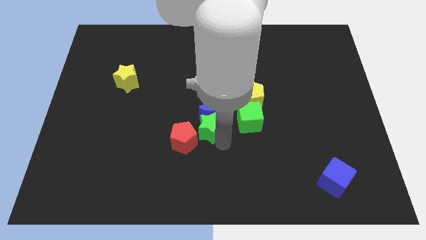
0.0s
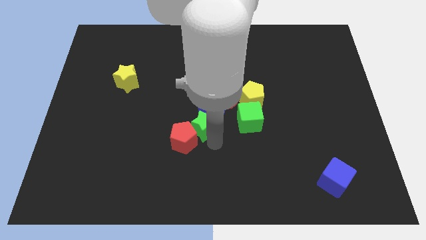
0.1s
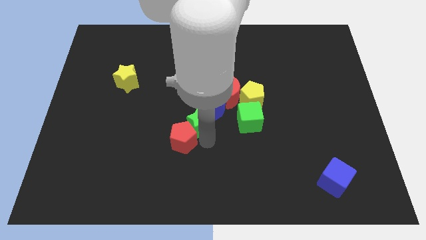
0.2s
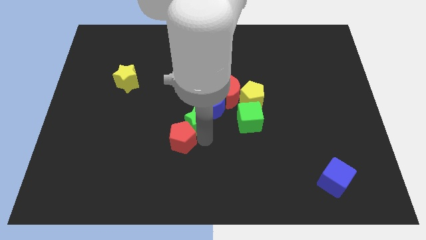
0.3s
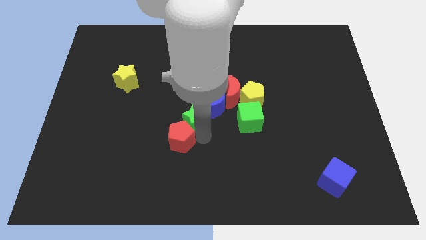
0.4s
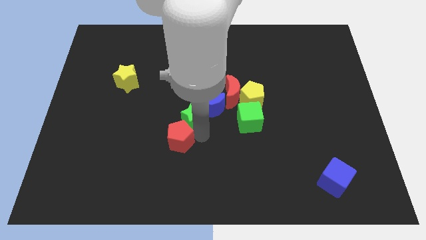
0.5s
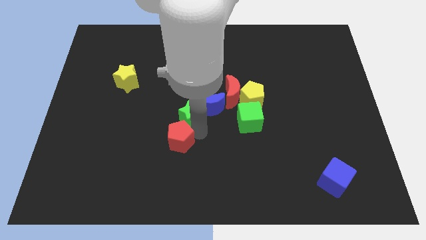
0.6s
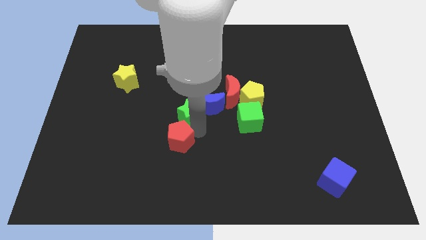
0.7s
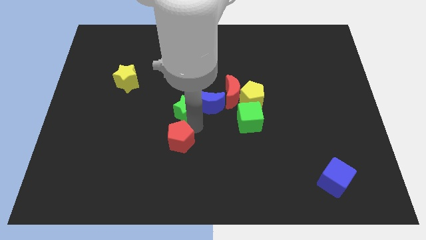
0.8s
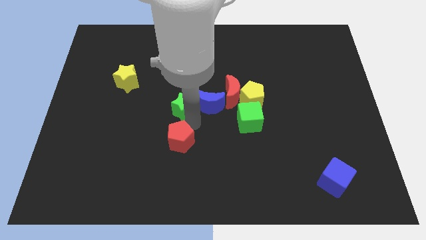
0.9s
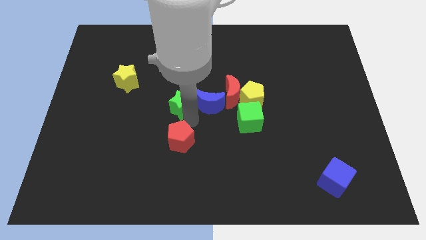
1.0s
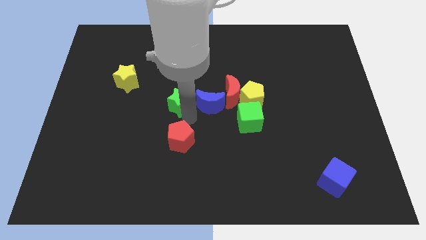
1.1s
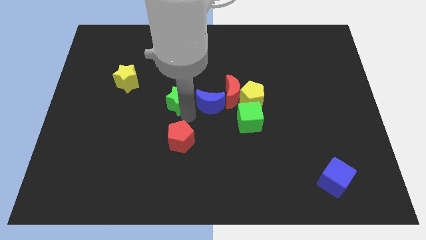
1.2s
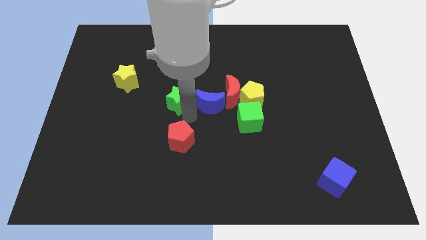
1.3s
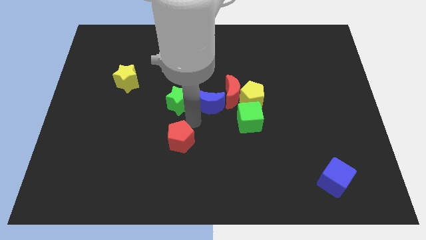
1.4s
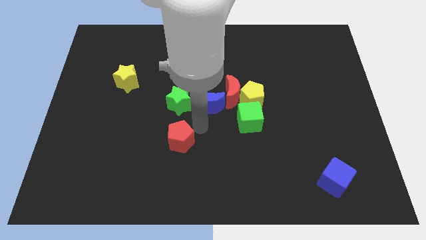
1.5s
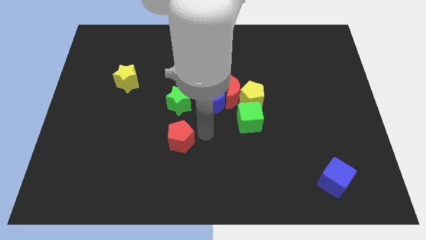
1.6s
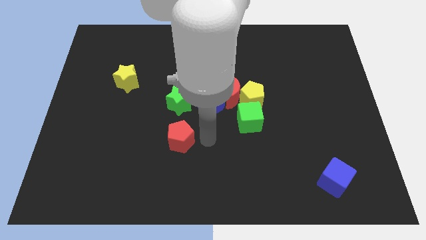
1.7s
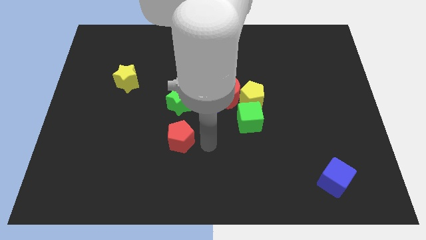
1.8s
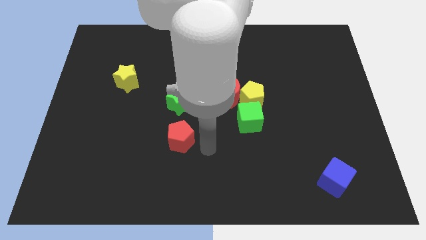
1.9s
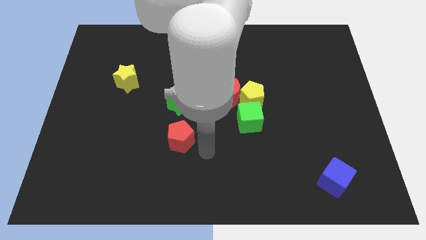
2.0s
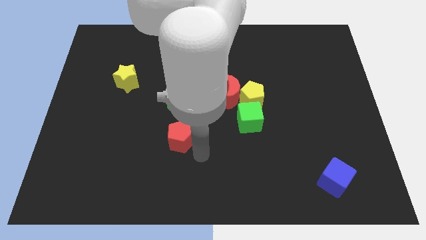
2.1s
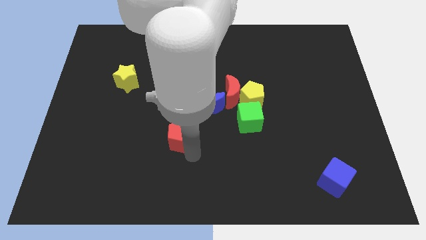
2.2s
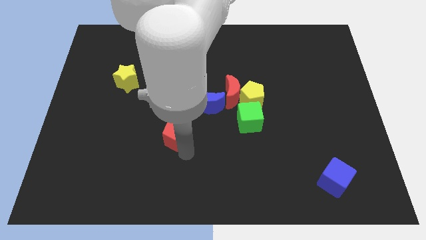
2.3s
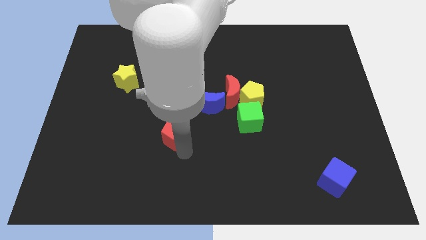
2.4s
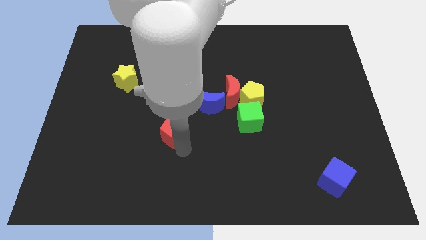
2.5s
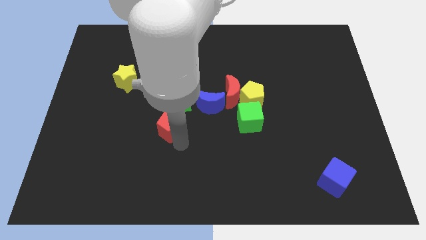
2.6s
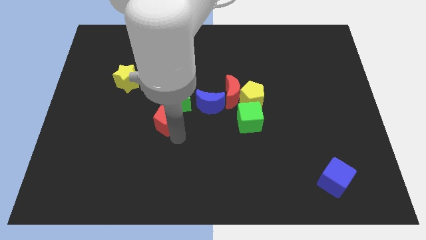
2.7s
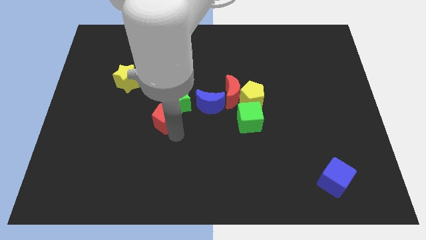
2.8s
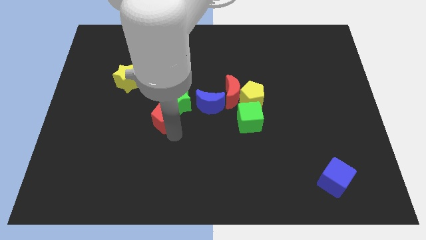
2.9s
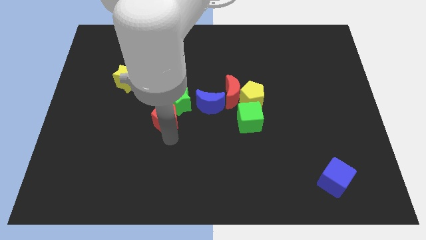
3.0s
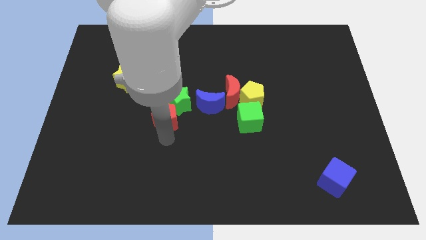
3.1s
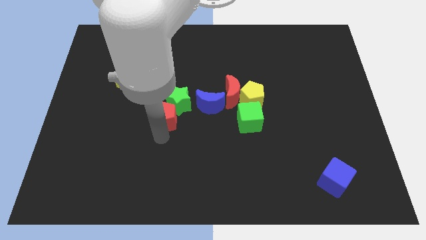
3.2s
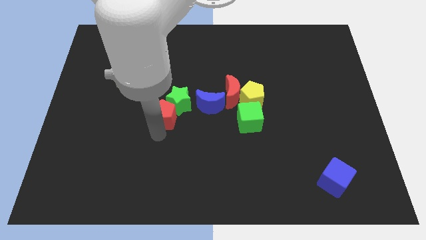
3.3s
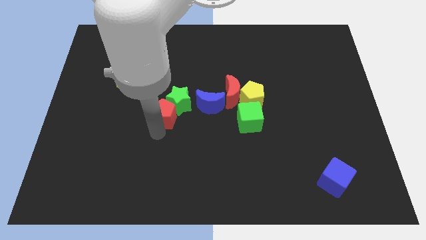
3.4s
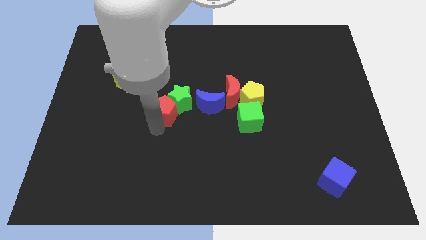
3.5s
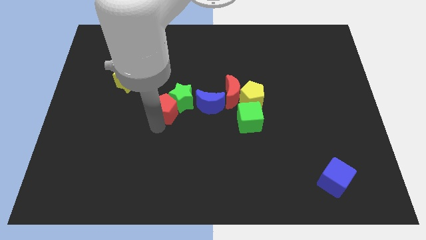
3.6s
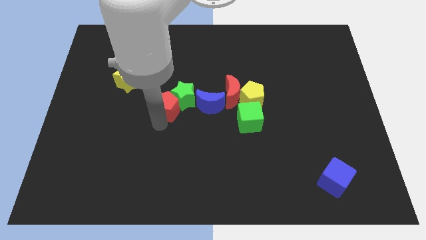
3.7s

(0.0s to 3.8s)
move the green star to the left side of the blue moon

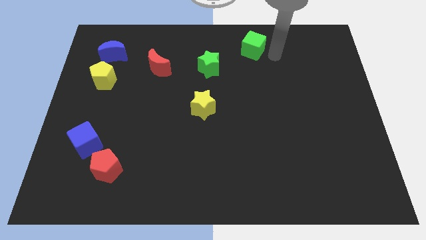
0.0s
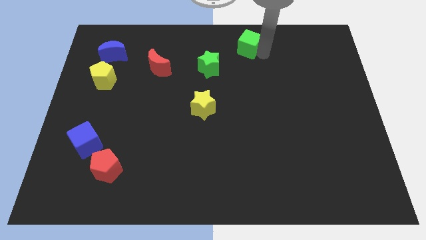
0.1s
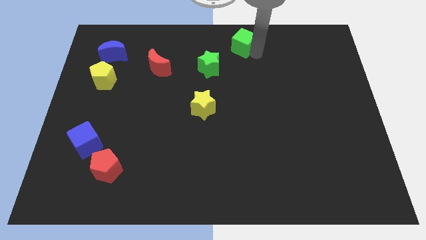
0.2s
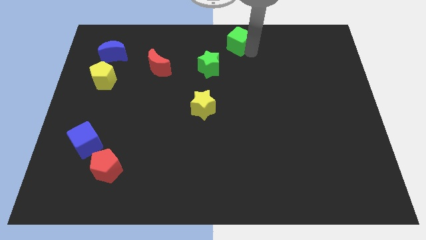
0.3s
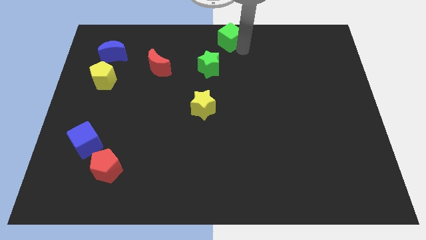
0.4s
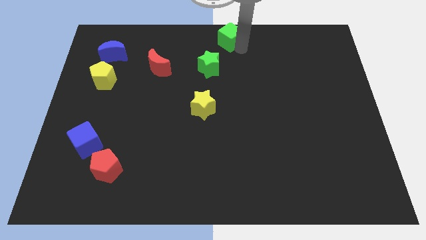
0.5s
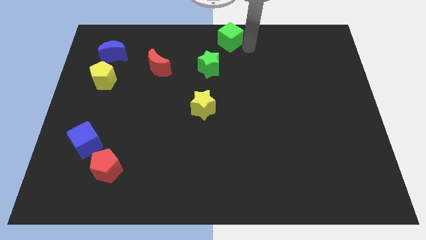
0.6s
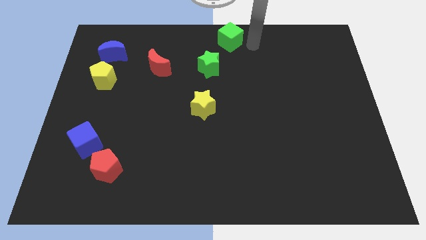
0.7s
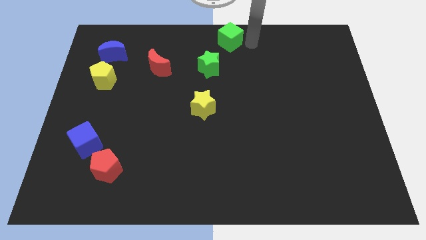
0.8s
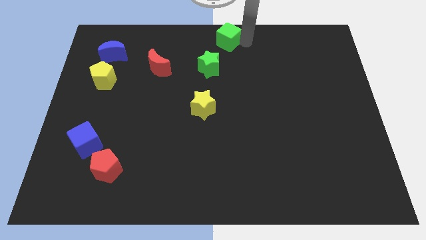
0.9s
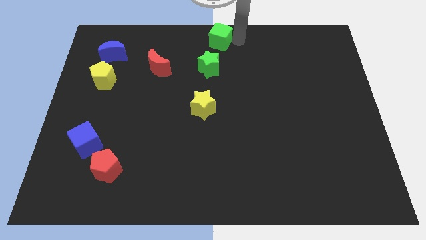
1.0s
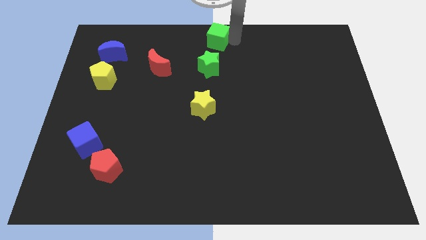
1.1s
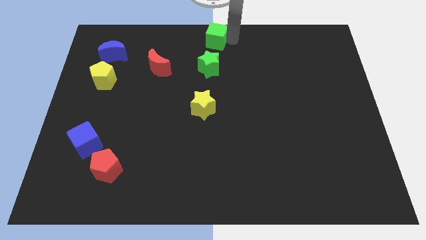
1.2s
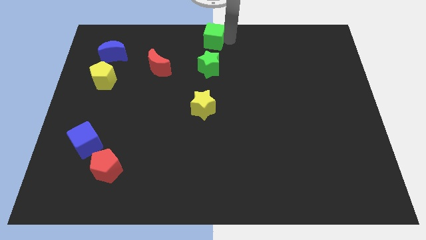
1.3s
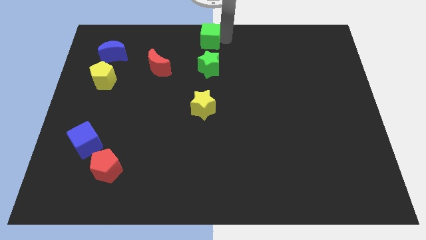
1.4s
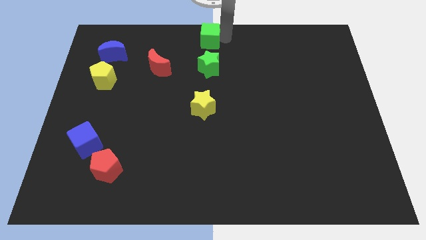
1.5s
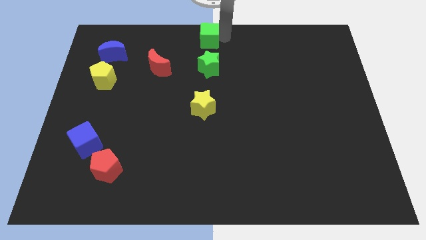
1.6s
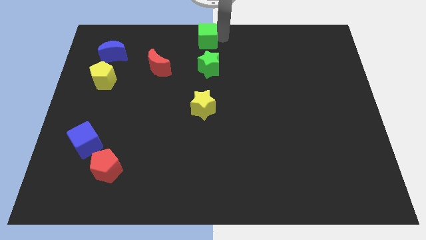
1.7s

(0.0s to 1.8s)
move the green cube to the top center

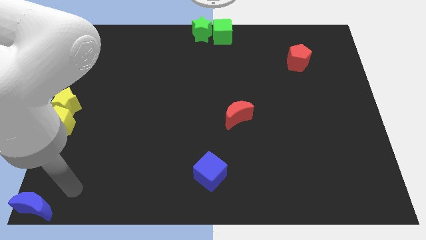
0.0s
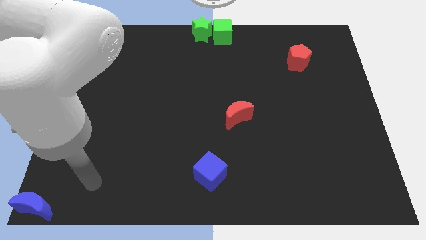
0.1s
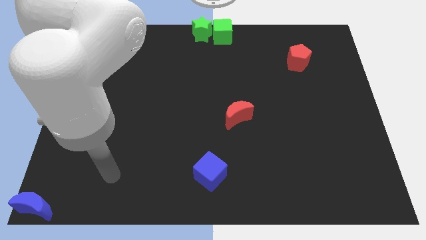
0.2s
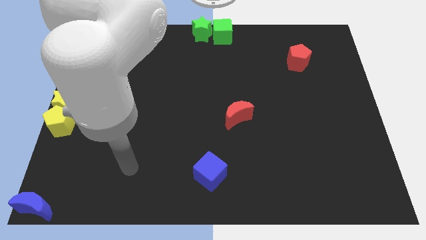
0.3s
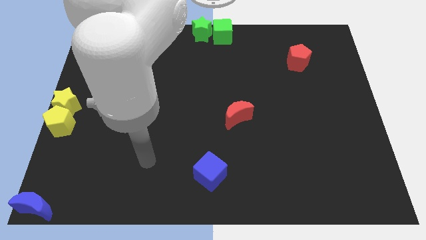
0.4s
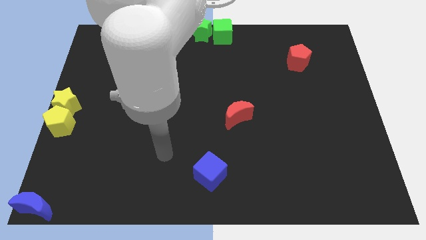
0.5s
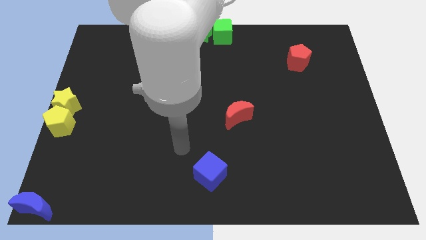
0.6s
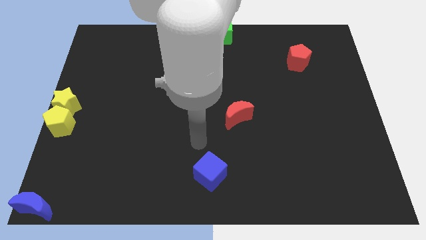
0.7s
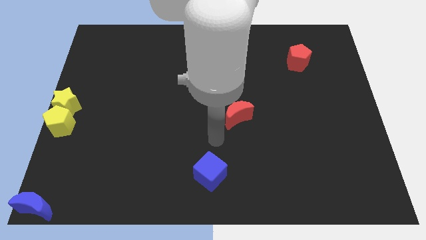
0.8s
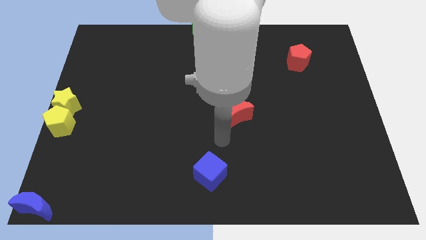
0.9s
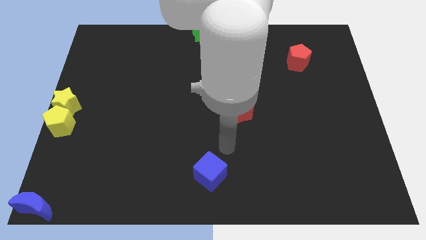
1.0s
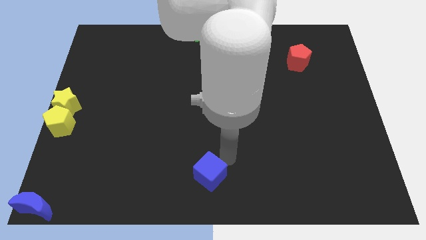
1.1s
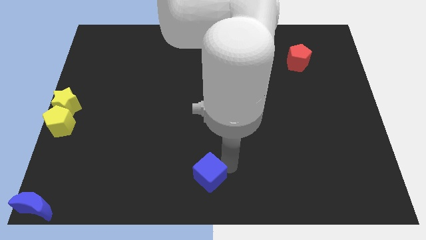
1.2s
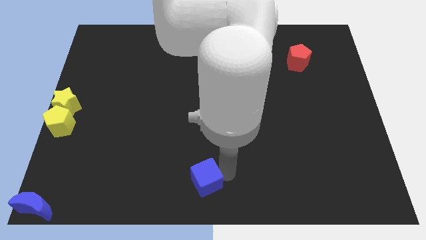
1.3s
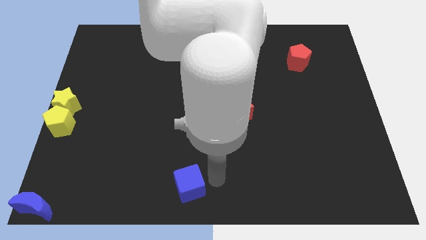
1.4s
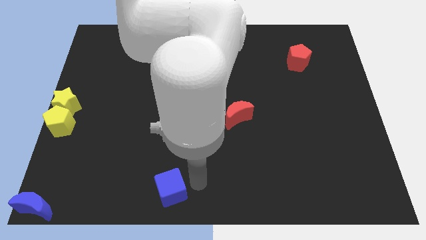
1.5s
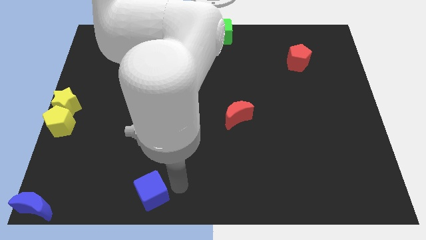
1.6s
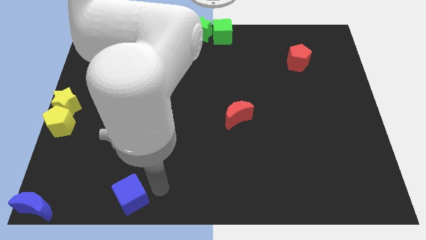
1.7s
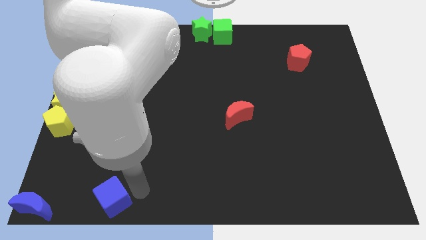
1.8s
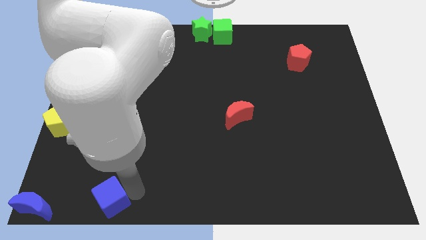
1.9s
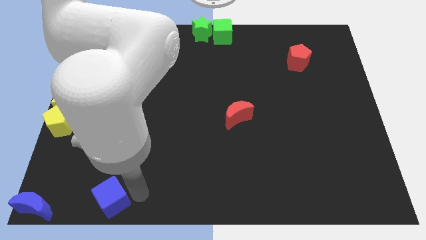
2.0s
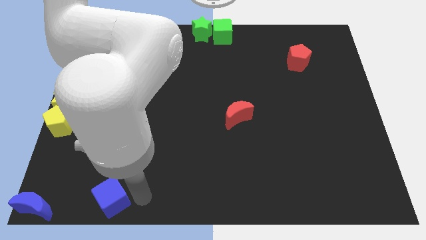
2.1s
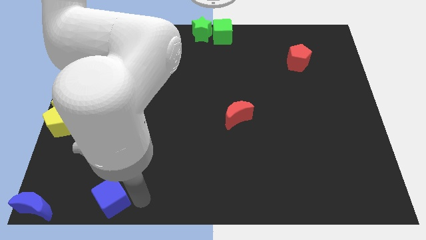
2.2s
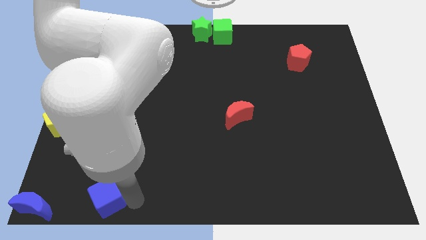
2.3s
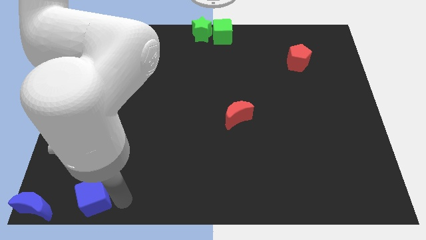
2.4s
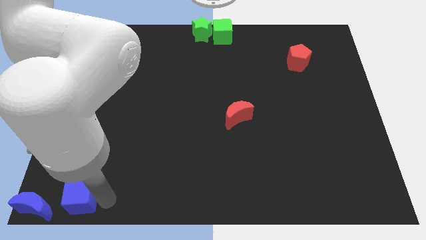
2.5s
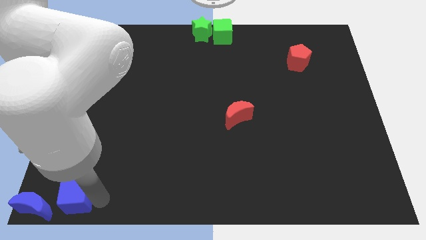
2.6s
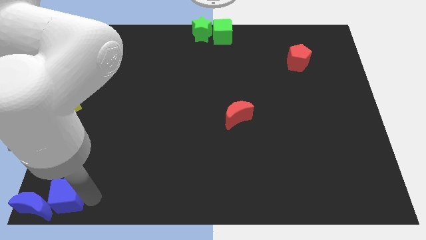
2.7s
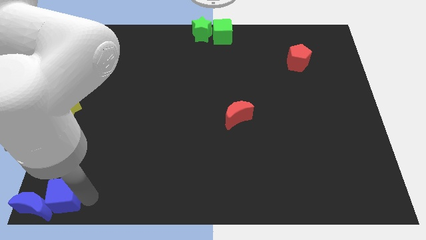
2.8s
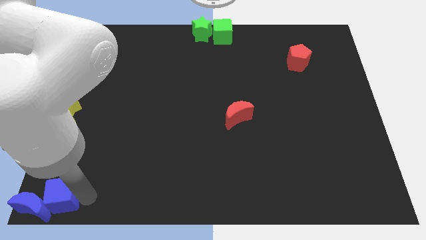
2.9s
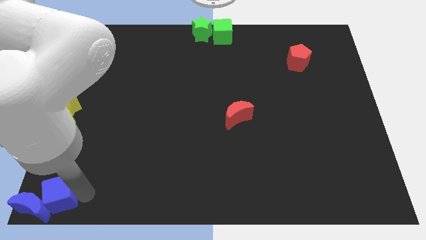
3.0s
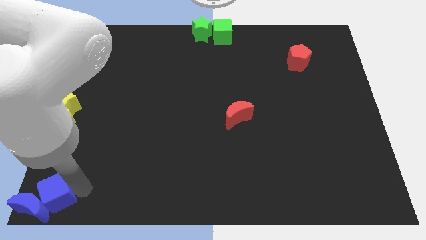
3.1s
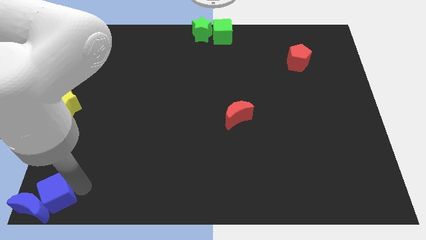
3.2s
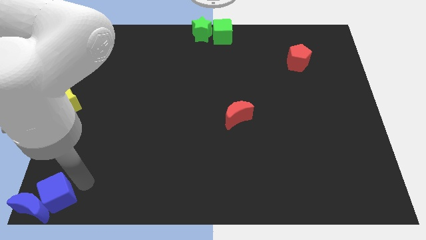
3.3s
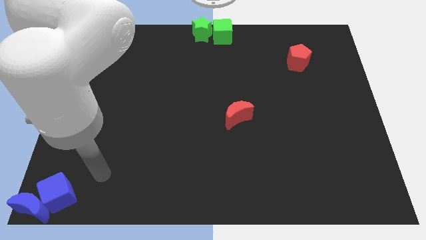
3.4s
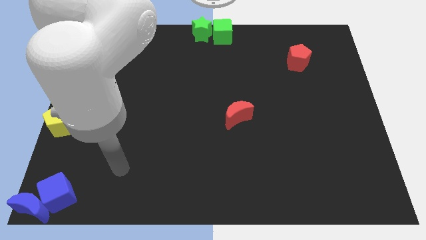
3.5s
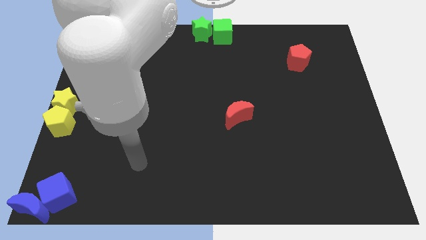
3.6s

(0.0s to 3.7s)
push the blue cube into the blue crescent
